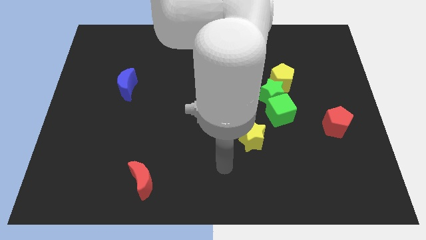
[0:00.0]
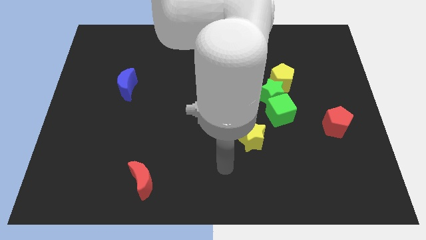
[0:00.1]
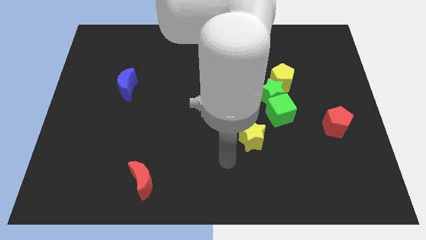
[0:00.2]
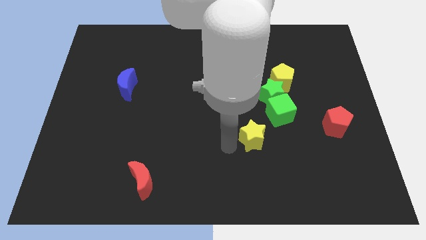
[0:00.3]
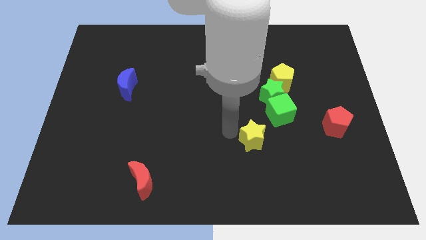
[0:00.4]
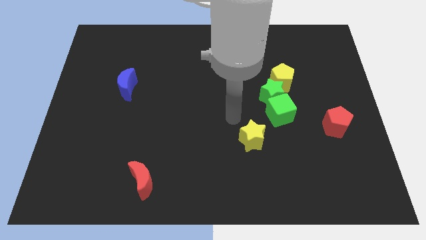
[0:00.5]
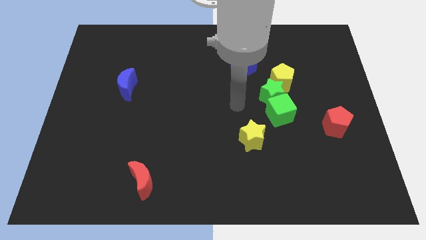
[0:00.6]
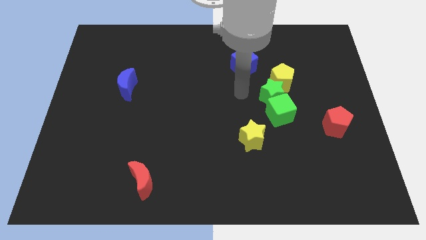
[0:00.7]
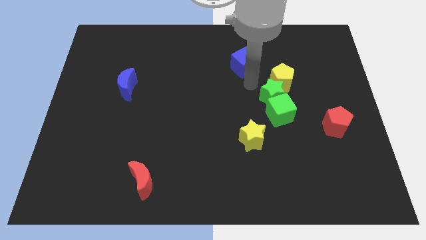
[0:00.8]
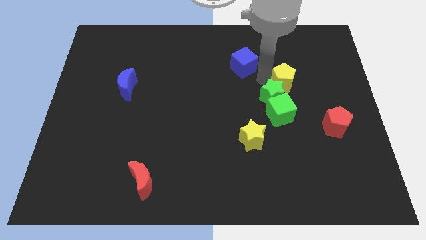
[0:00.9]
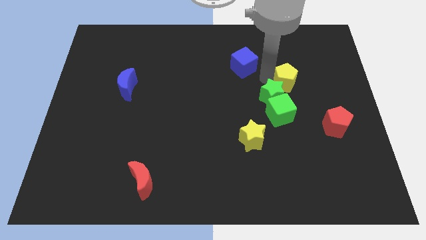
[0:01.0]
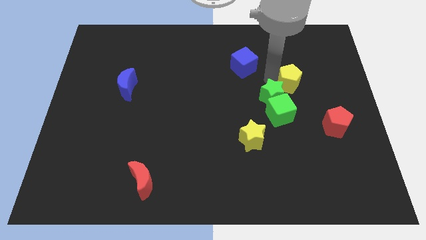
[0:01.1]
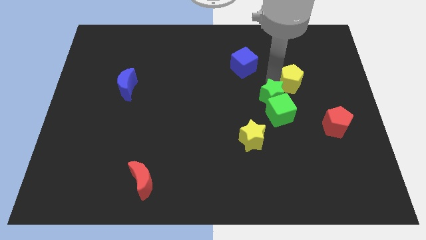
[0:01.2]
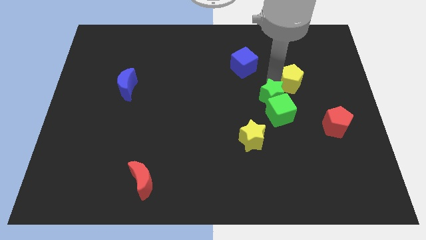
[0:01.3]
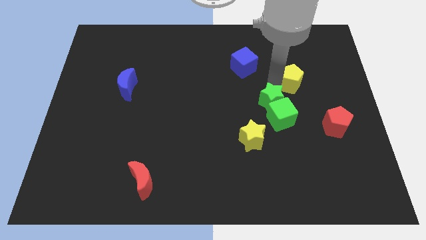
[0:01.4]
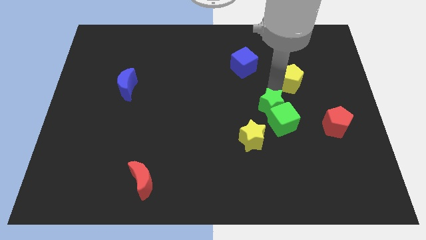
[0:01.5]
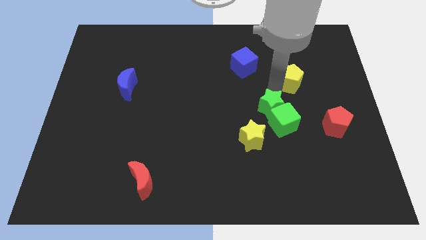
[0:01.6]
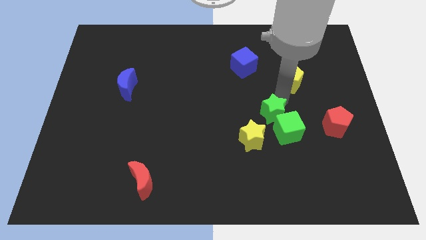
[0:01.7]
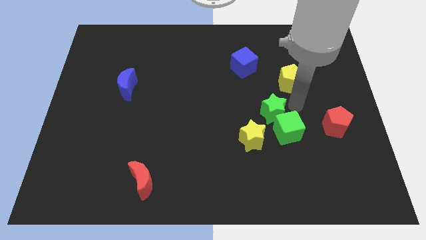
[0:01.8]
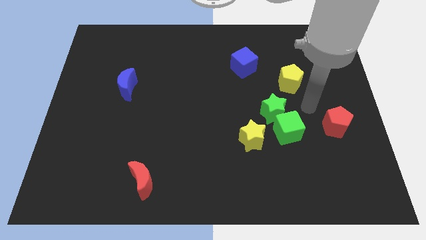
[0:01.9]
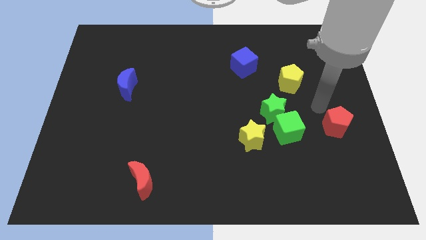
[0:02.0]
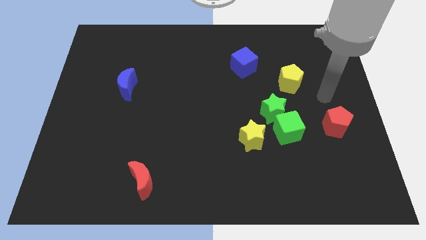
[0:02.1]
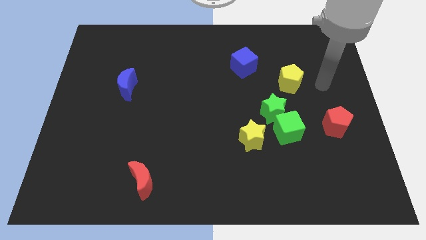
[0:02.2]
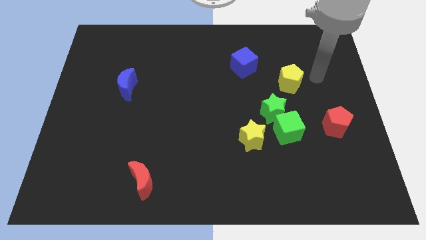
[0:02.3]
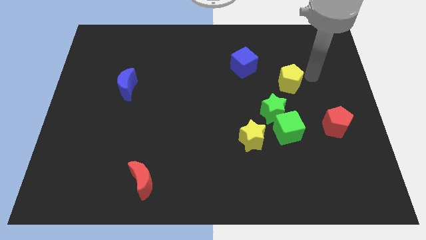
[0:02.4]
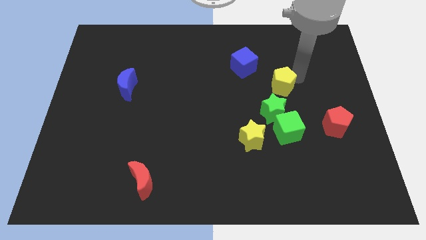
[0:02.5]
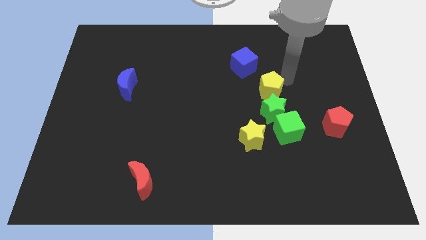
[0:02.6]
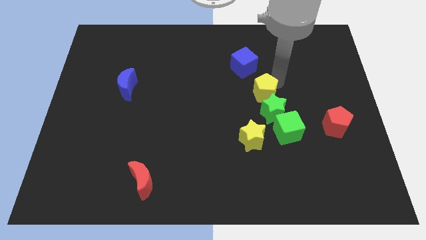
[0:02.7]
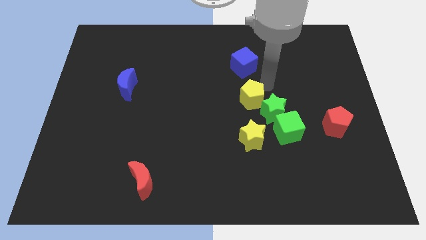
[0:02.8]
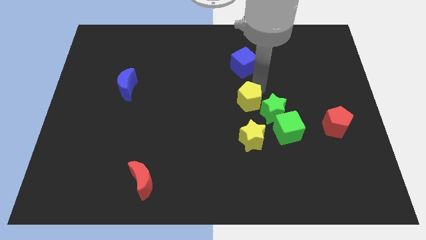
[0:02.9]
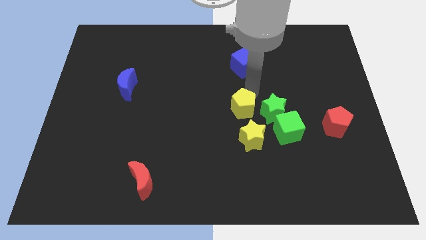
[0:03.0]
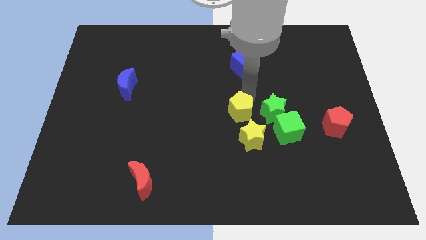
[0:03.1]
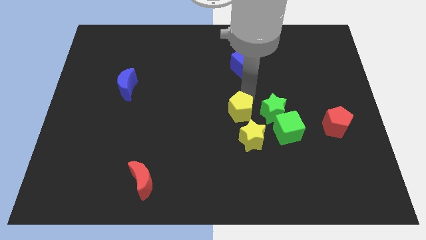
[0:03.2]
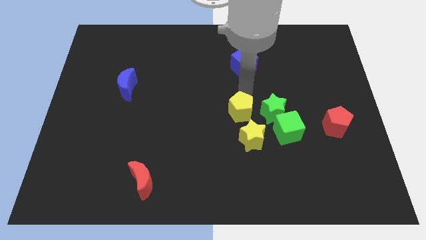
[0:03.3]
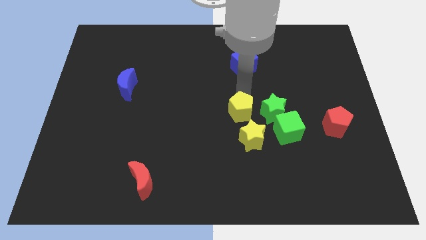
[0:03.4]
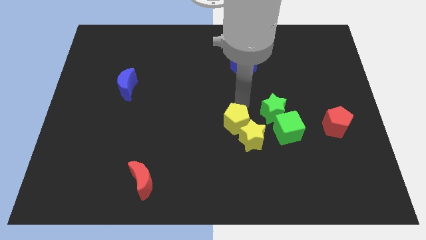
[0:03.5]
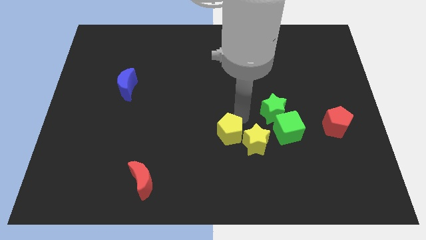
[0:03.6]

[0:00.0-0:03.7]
push the yellow pentagon into yellow star

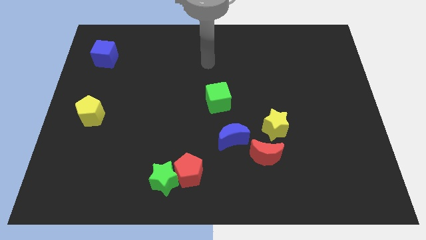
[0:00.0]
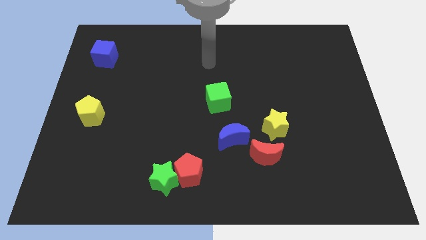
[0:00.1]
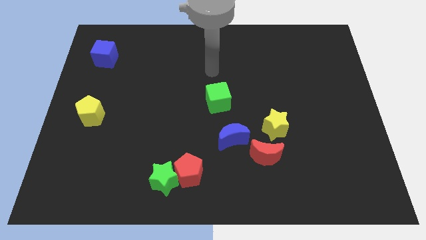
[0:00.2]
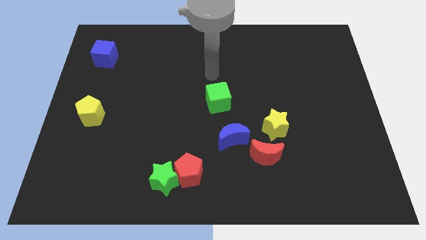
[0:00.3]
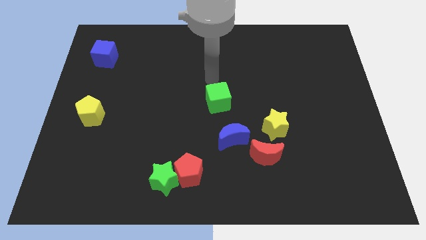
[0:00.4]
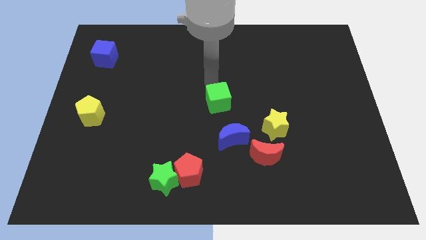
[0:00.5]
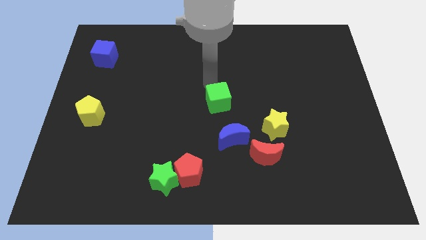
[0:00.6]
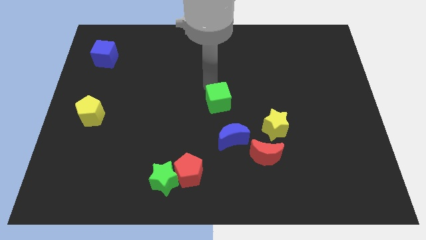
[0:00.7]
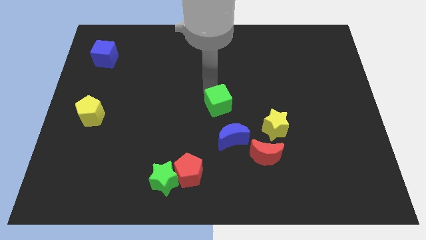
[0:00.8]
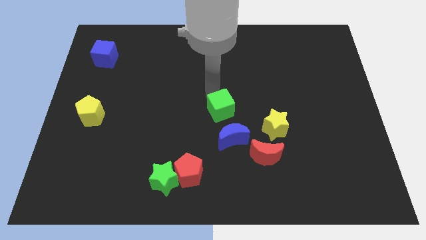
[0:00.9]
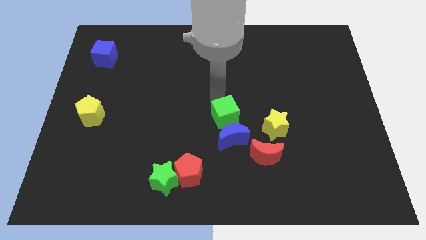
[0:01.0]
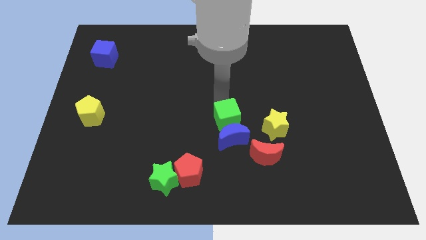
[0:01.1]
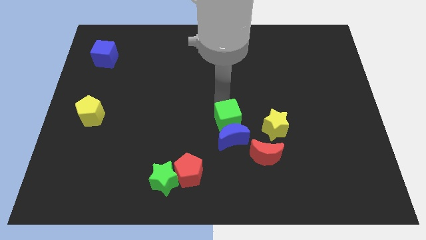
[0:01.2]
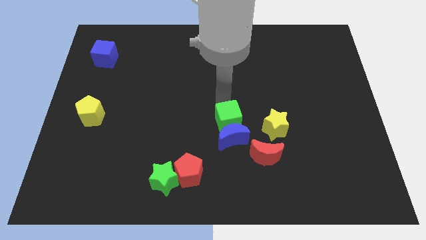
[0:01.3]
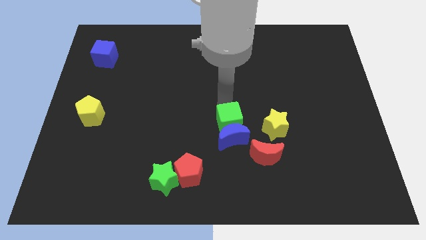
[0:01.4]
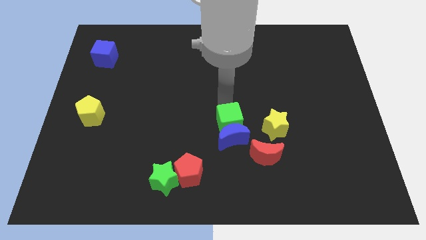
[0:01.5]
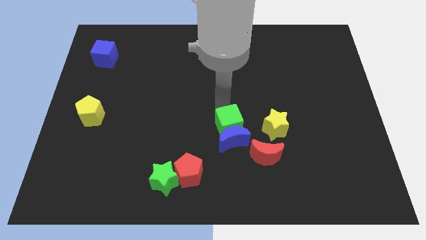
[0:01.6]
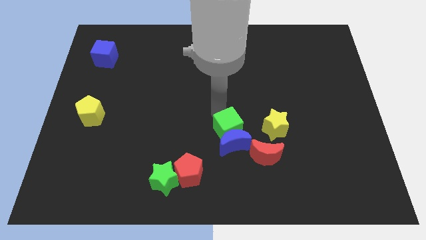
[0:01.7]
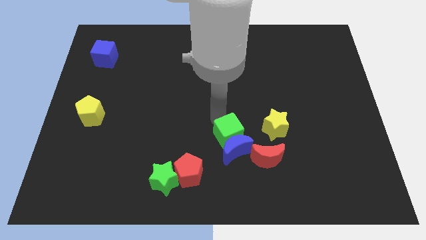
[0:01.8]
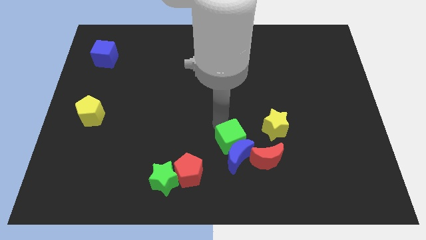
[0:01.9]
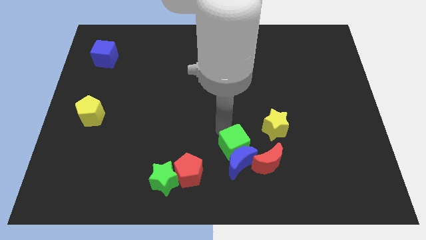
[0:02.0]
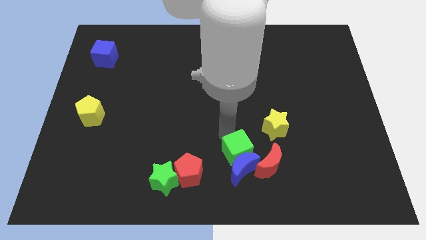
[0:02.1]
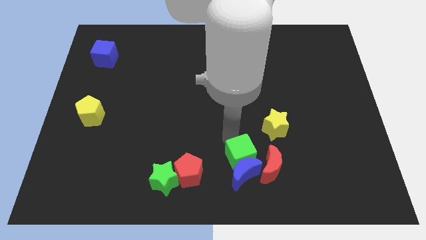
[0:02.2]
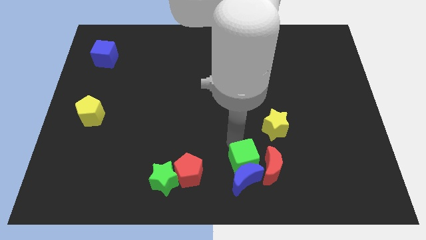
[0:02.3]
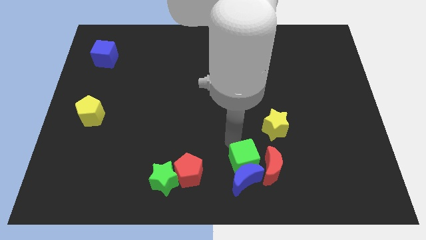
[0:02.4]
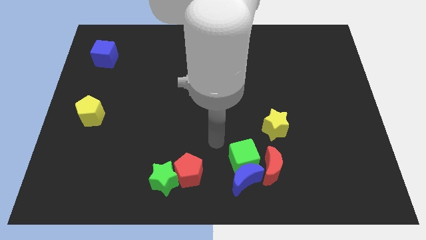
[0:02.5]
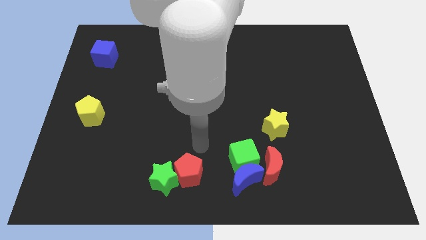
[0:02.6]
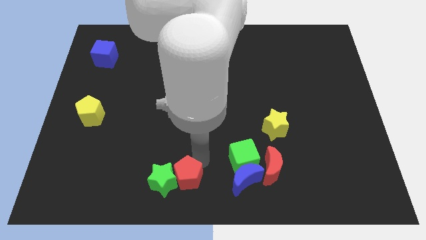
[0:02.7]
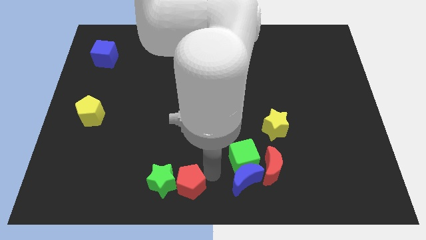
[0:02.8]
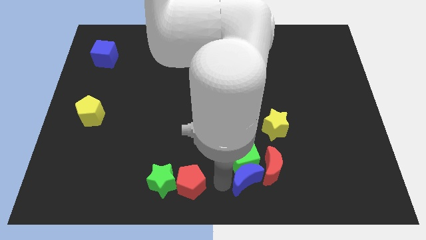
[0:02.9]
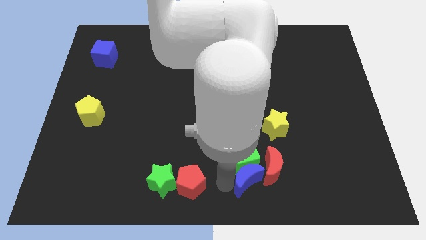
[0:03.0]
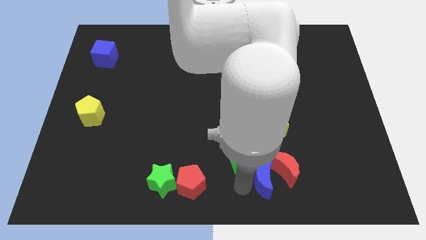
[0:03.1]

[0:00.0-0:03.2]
push green cube and blue moon to the bottom of the board

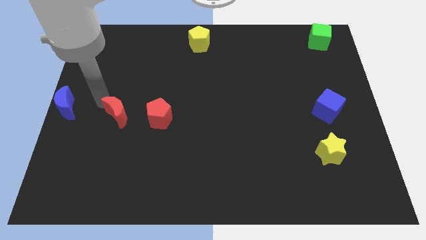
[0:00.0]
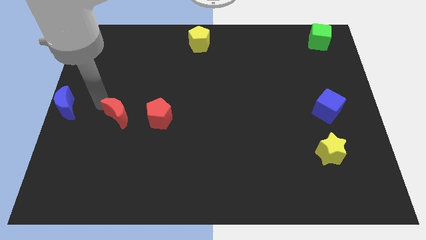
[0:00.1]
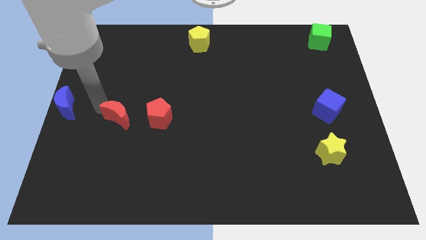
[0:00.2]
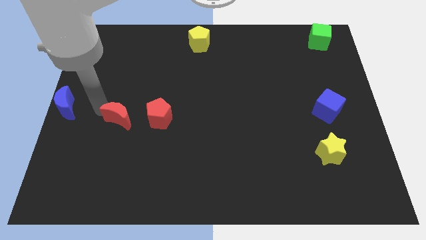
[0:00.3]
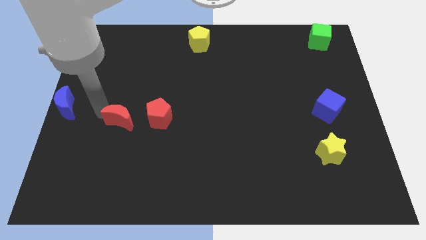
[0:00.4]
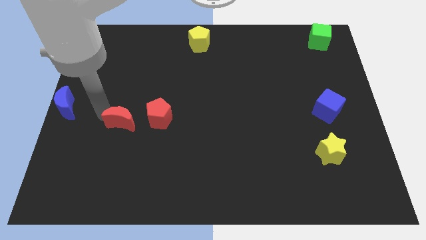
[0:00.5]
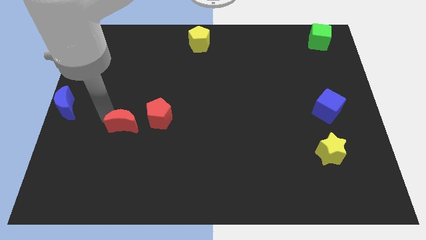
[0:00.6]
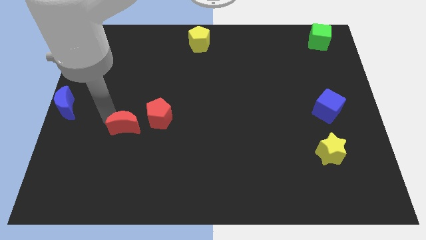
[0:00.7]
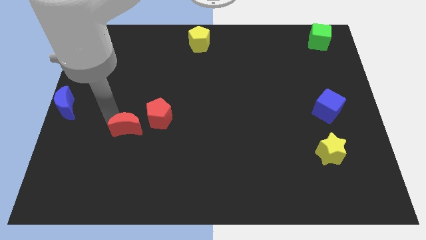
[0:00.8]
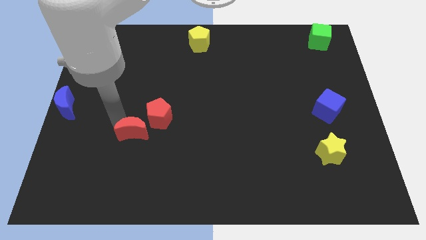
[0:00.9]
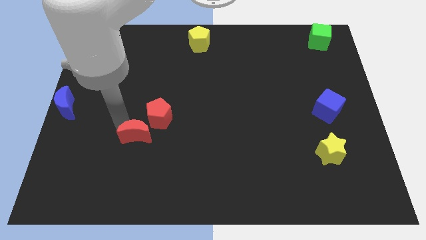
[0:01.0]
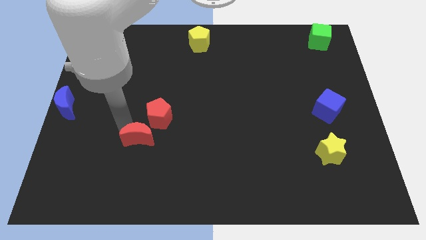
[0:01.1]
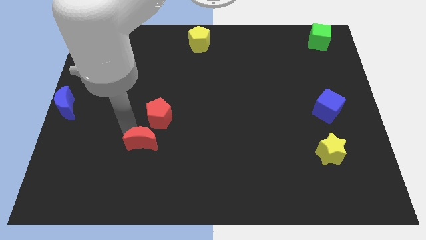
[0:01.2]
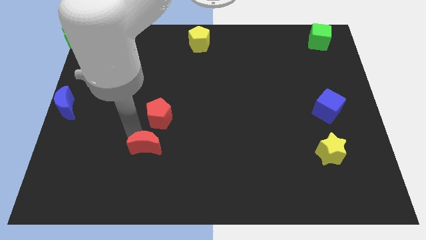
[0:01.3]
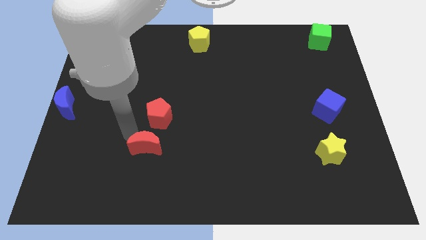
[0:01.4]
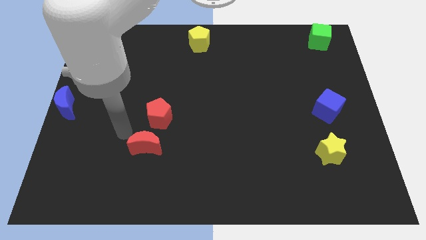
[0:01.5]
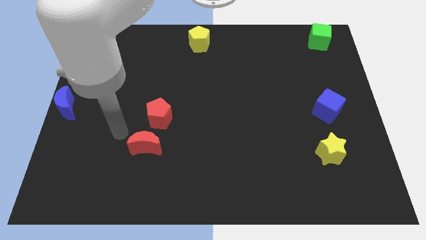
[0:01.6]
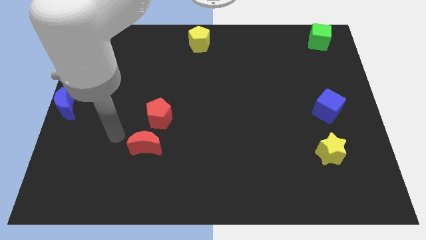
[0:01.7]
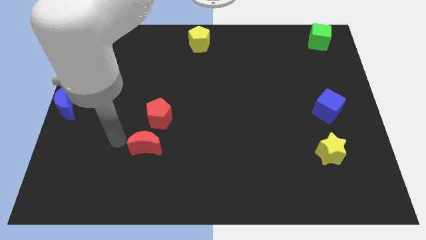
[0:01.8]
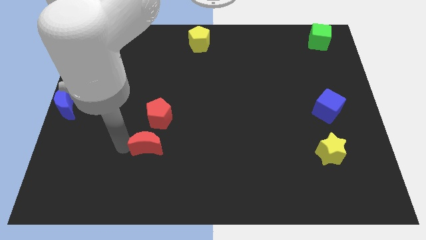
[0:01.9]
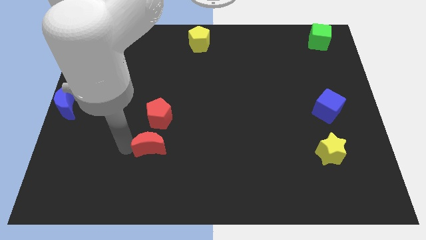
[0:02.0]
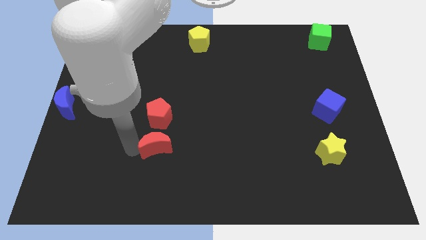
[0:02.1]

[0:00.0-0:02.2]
place the red moon below the red pentagon
